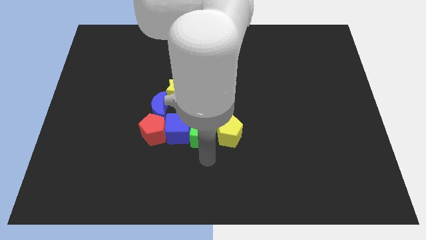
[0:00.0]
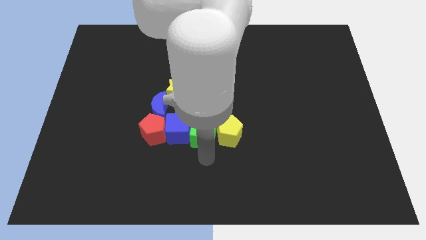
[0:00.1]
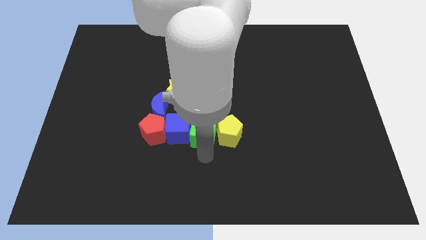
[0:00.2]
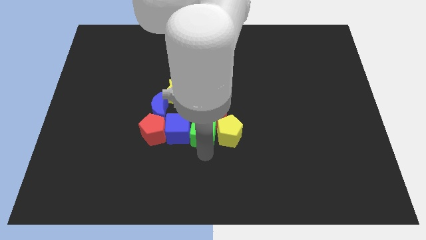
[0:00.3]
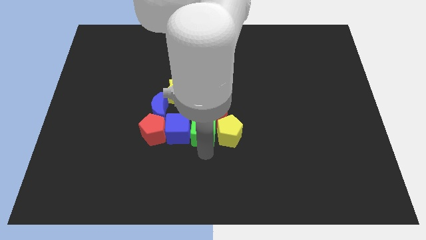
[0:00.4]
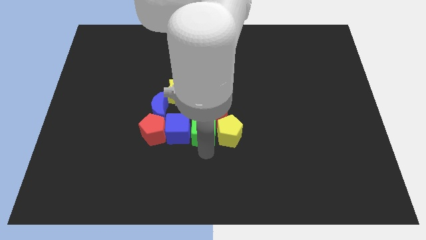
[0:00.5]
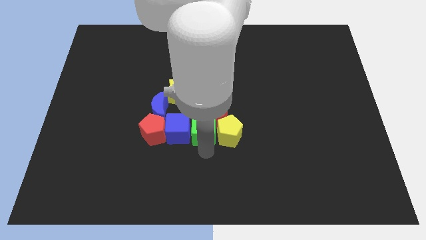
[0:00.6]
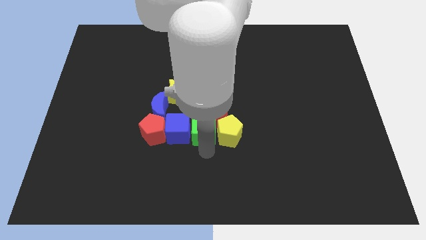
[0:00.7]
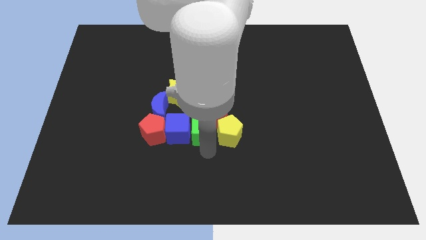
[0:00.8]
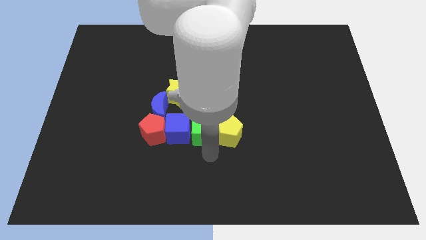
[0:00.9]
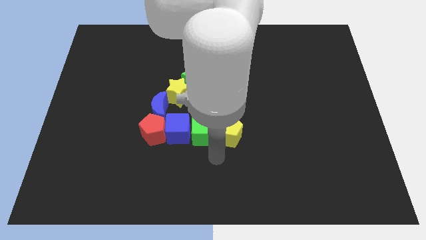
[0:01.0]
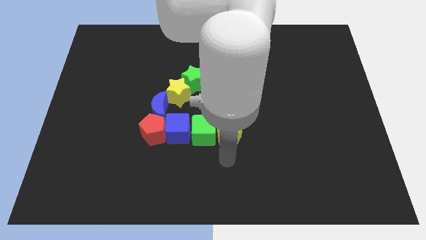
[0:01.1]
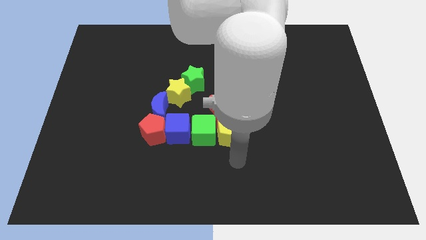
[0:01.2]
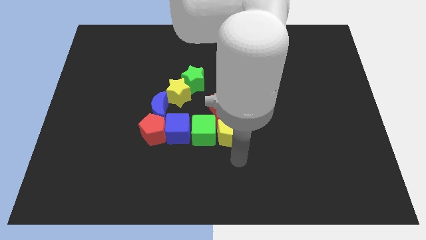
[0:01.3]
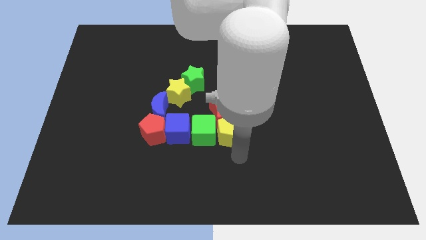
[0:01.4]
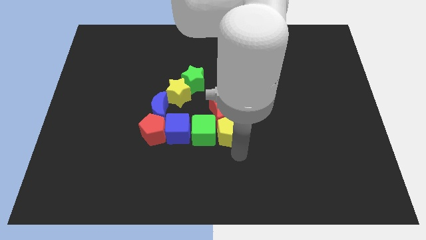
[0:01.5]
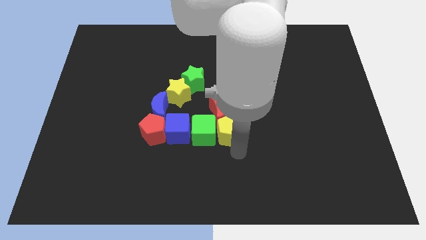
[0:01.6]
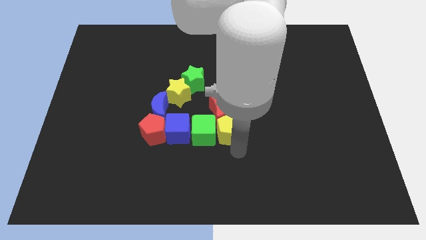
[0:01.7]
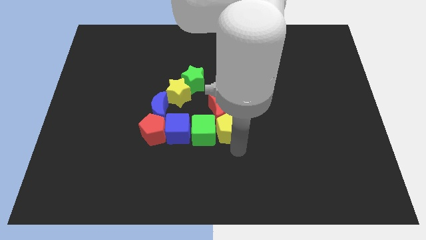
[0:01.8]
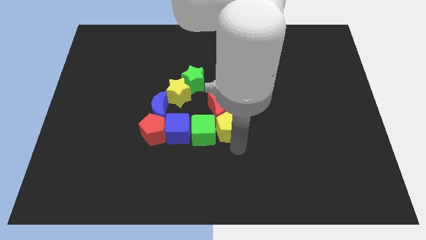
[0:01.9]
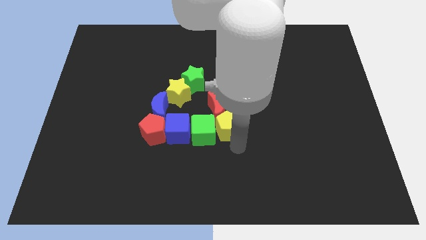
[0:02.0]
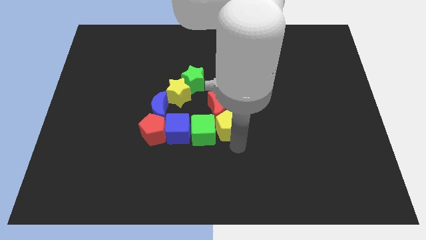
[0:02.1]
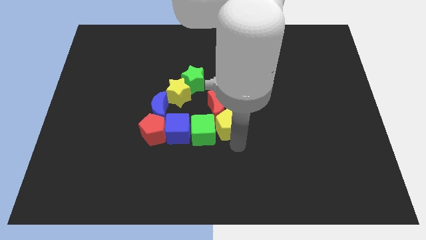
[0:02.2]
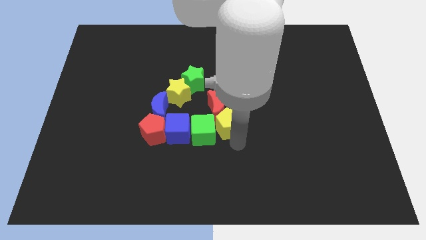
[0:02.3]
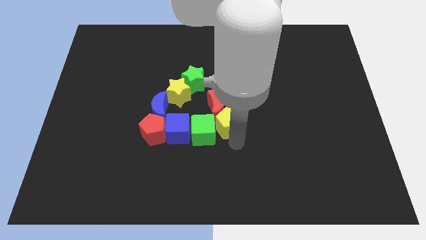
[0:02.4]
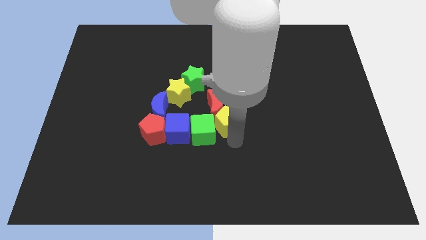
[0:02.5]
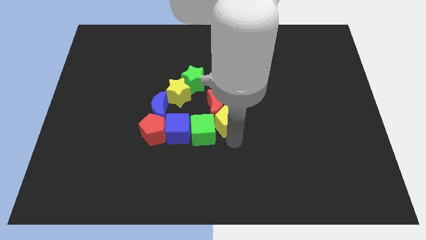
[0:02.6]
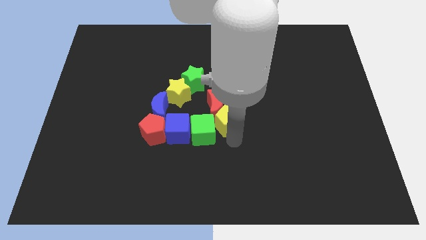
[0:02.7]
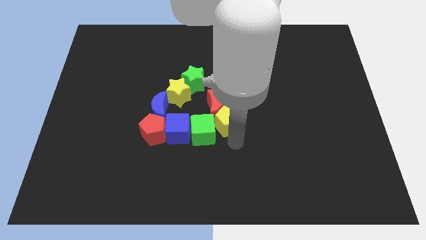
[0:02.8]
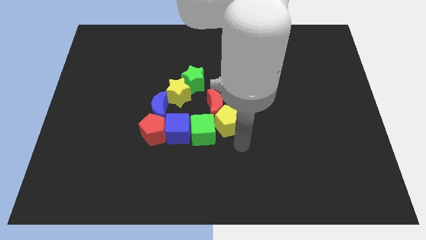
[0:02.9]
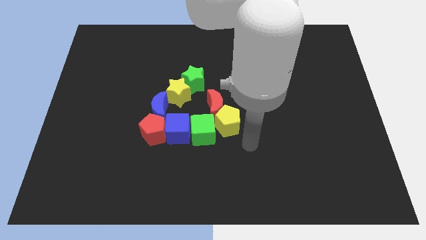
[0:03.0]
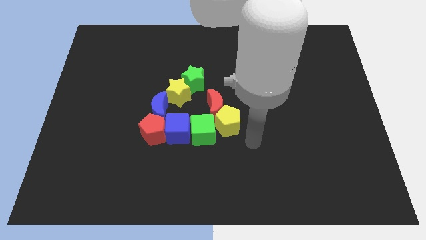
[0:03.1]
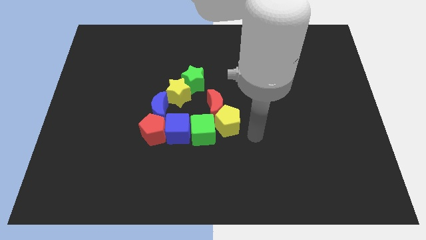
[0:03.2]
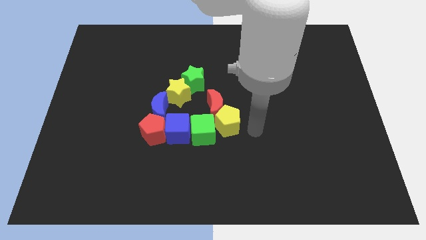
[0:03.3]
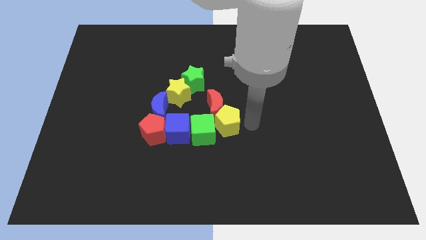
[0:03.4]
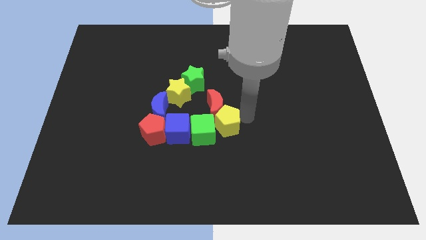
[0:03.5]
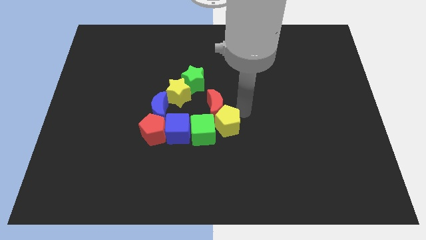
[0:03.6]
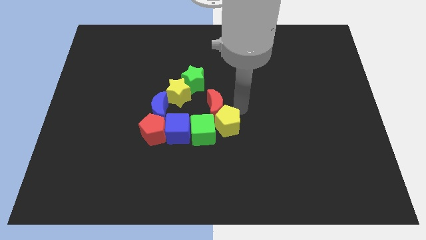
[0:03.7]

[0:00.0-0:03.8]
push the yellow pentagon into the red moon

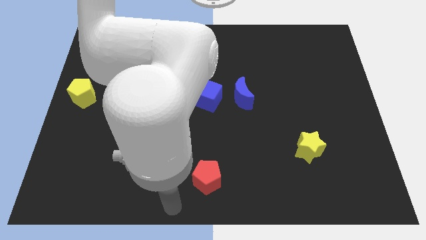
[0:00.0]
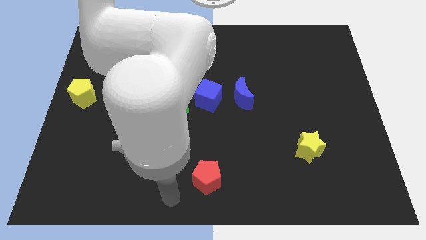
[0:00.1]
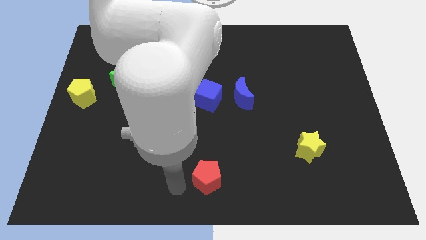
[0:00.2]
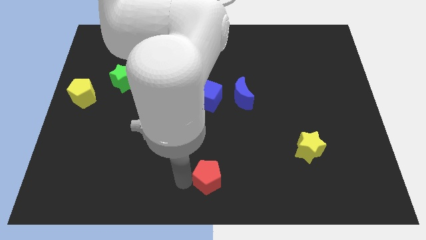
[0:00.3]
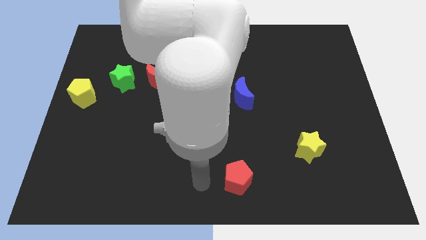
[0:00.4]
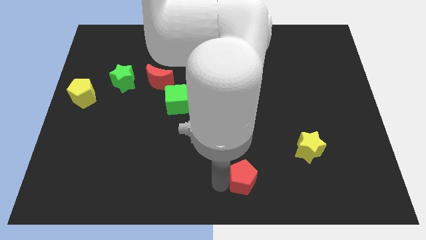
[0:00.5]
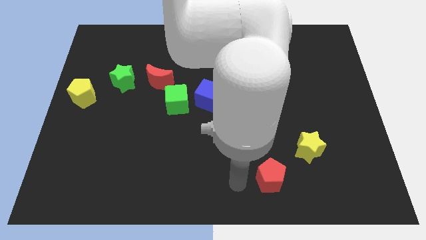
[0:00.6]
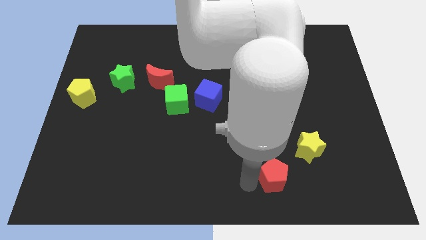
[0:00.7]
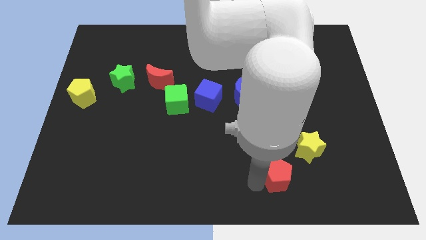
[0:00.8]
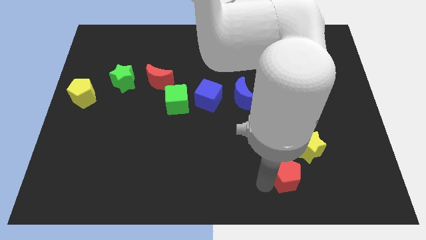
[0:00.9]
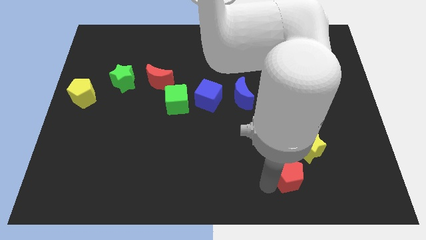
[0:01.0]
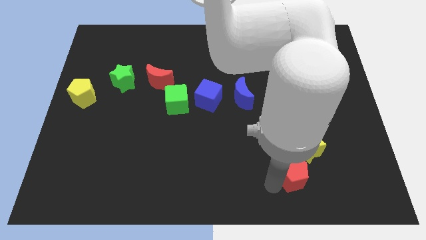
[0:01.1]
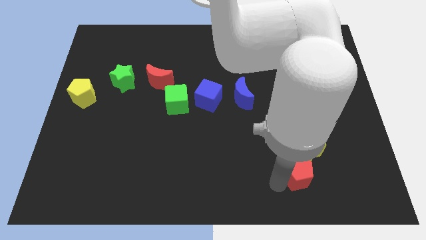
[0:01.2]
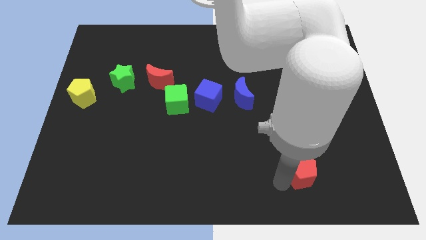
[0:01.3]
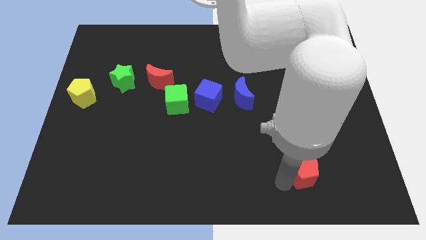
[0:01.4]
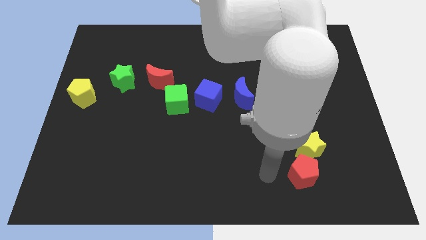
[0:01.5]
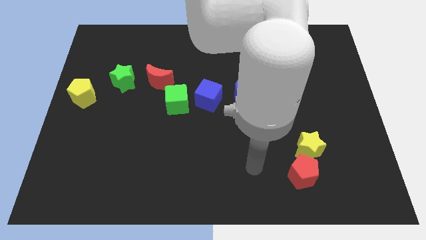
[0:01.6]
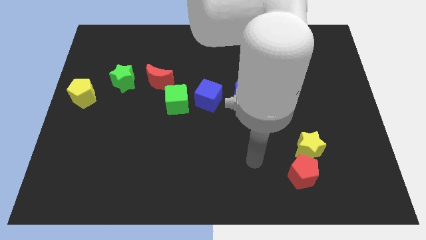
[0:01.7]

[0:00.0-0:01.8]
move the red pentagon close to the yellow star

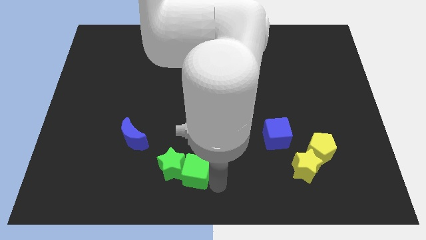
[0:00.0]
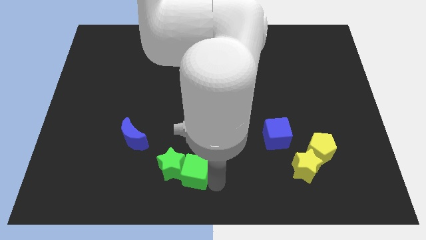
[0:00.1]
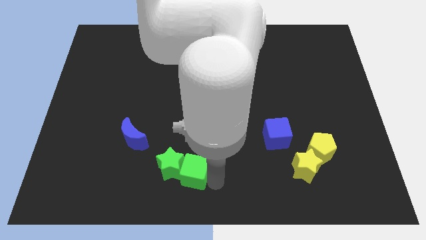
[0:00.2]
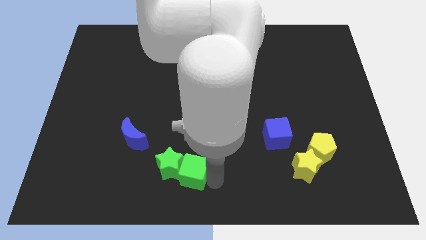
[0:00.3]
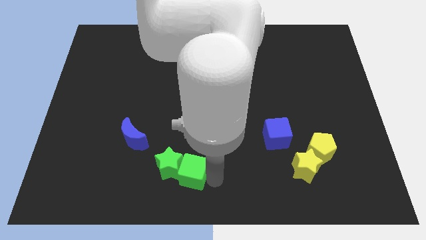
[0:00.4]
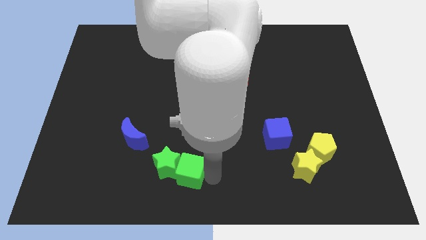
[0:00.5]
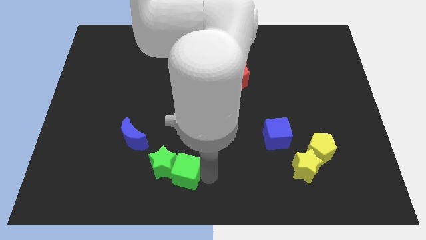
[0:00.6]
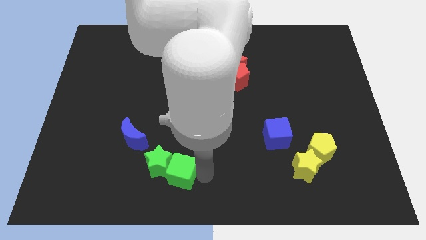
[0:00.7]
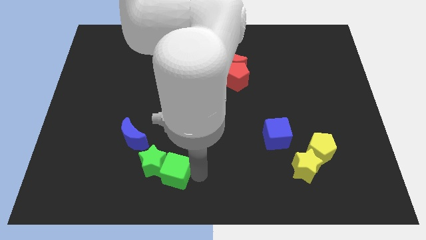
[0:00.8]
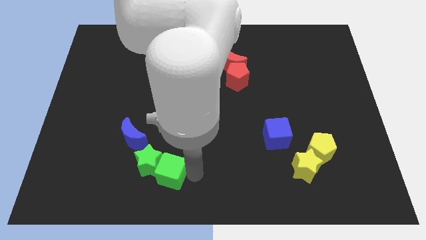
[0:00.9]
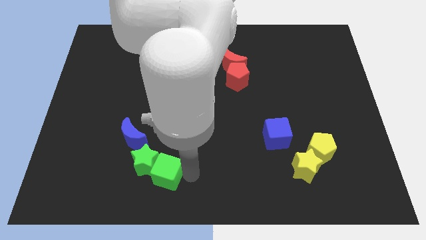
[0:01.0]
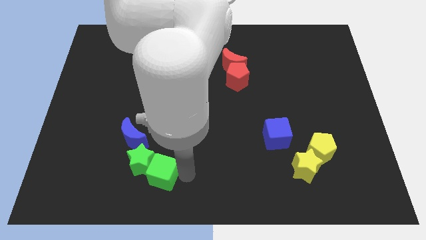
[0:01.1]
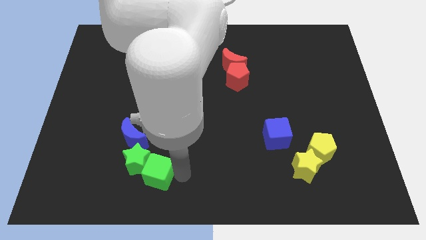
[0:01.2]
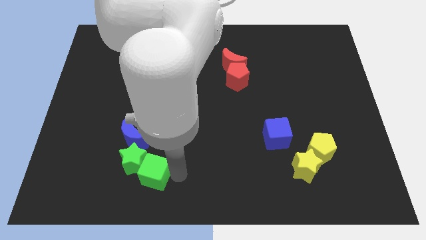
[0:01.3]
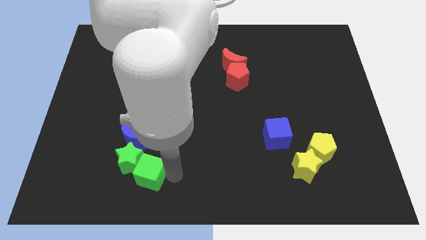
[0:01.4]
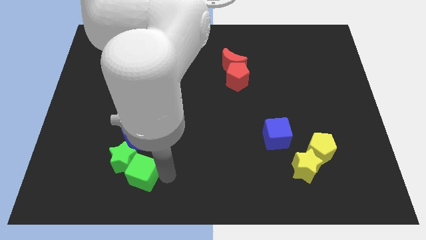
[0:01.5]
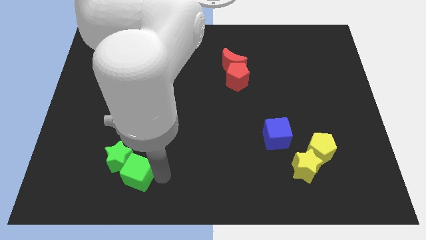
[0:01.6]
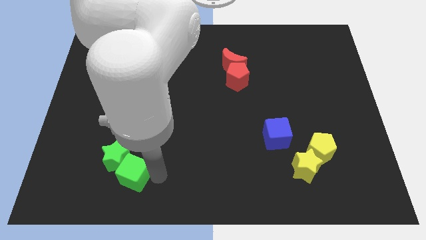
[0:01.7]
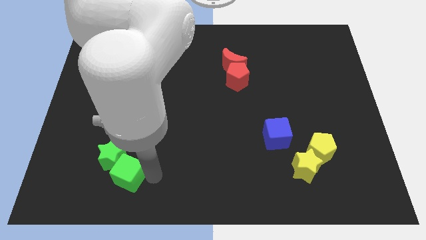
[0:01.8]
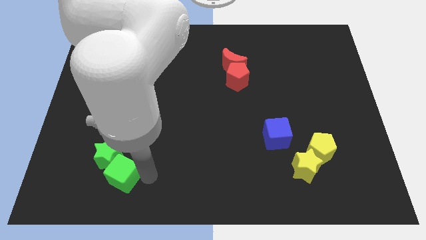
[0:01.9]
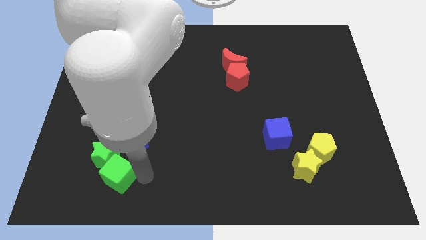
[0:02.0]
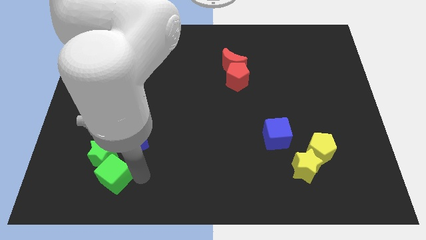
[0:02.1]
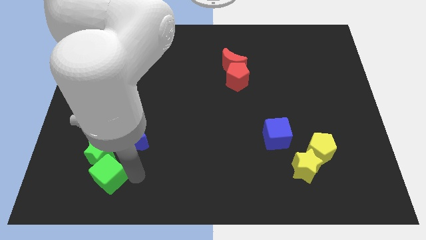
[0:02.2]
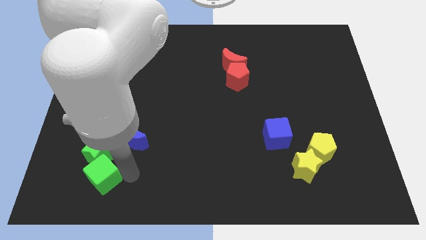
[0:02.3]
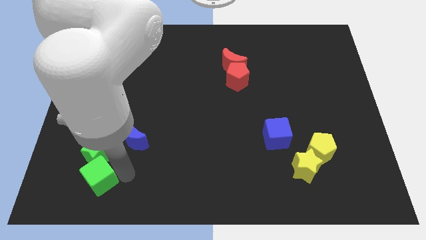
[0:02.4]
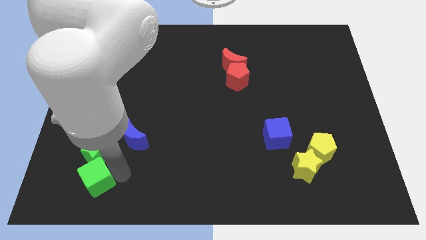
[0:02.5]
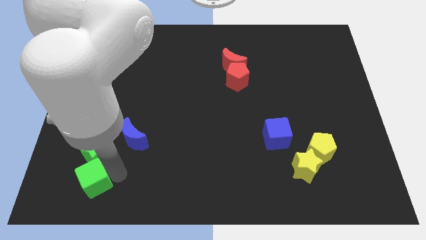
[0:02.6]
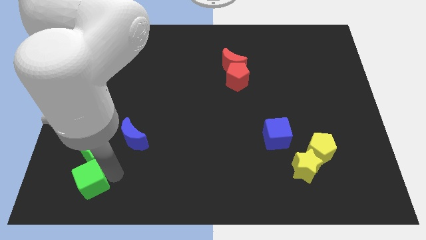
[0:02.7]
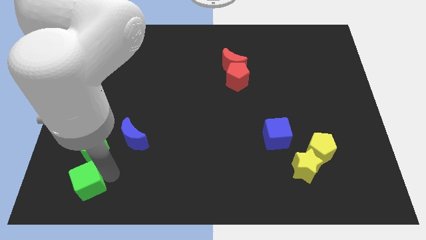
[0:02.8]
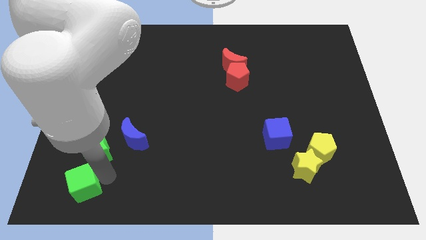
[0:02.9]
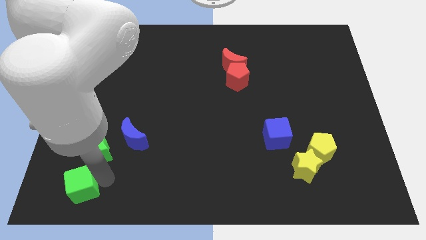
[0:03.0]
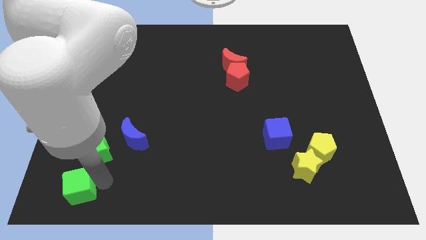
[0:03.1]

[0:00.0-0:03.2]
move the green blocks to the left side of the board

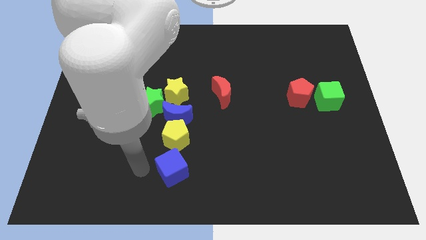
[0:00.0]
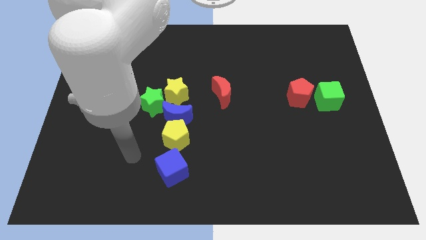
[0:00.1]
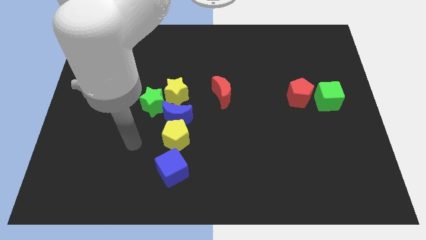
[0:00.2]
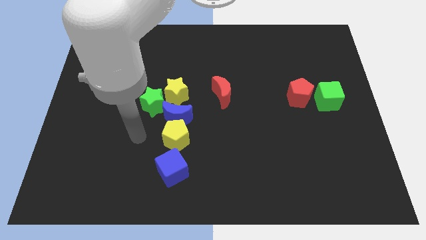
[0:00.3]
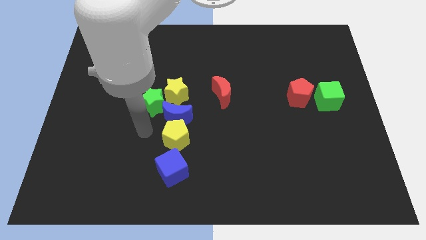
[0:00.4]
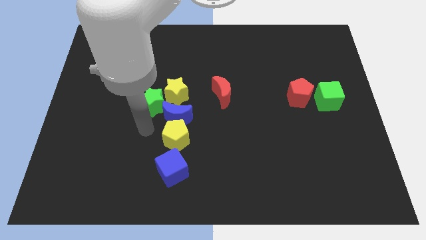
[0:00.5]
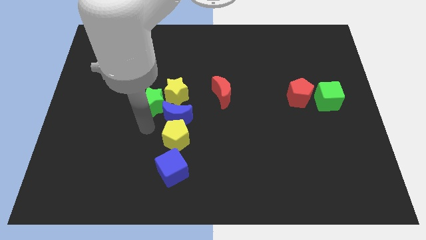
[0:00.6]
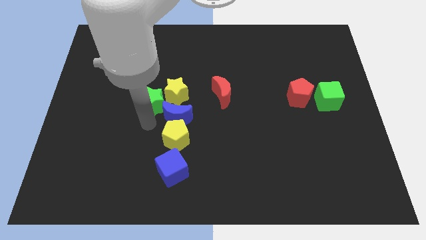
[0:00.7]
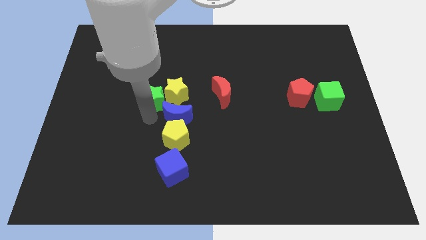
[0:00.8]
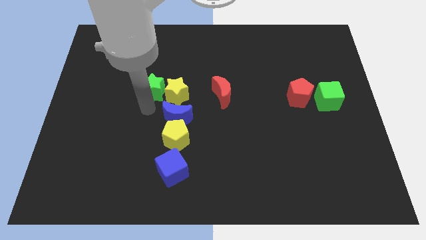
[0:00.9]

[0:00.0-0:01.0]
touch the bottom of green star
